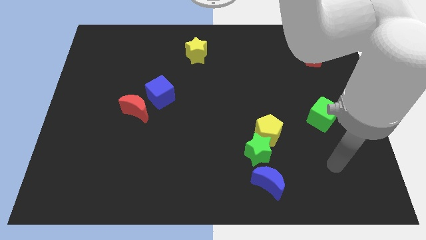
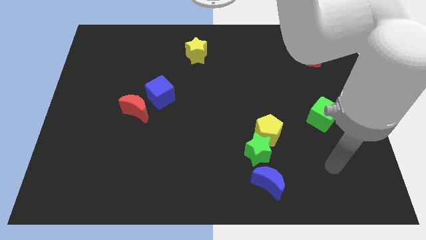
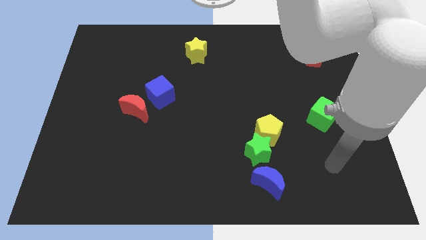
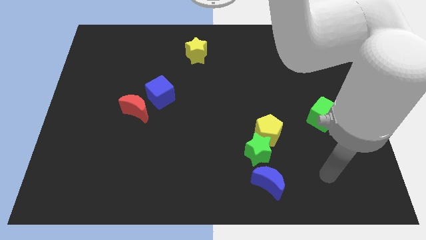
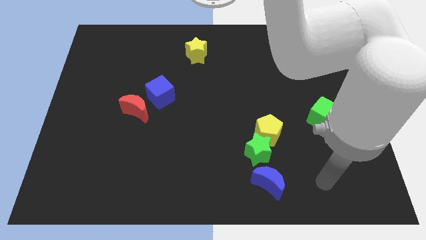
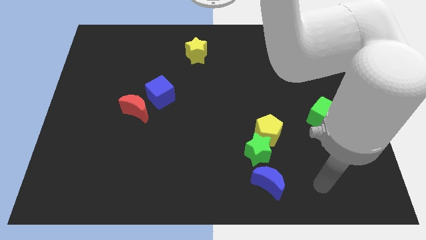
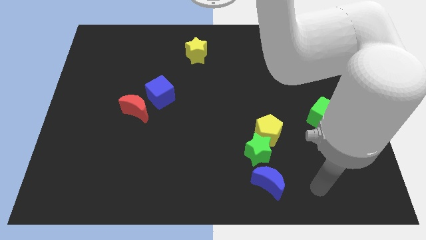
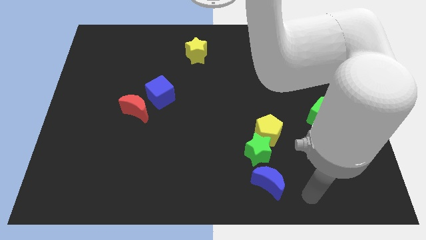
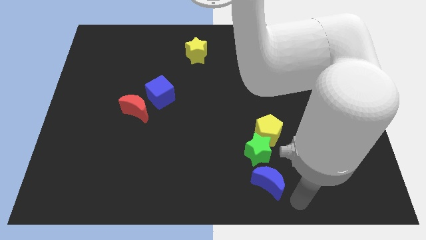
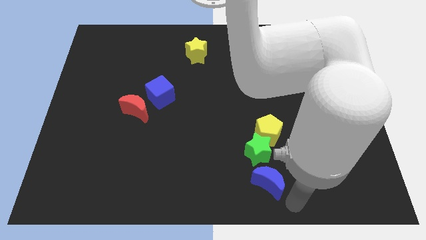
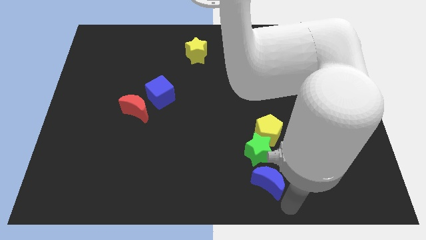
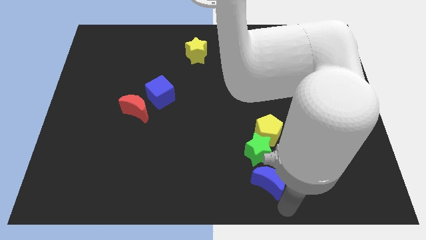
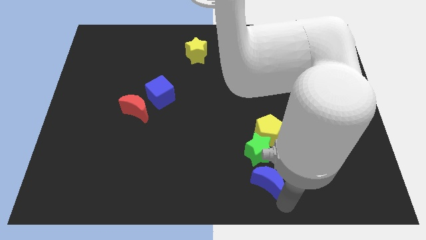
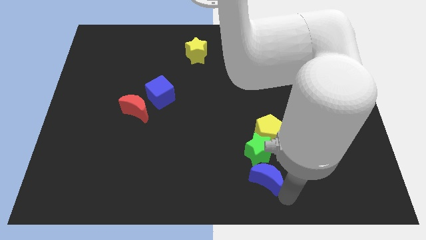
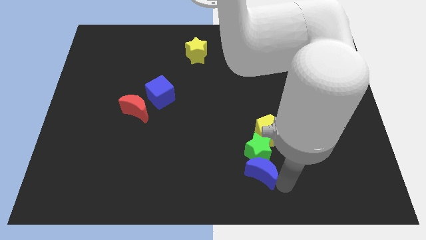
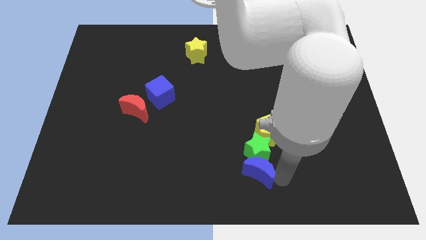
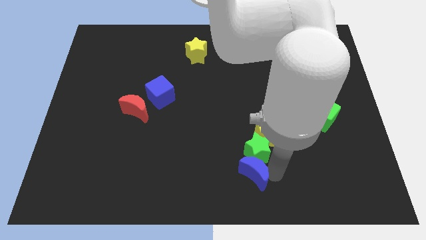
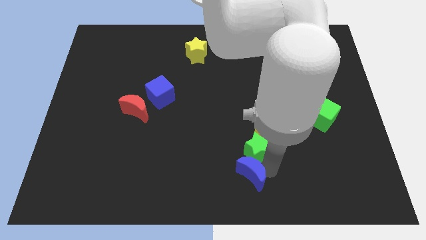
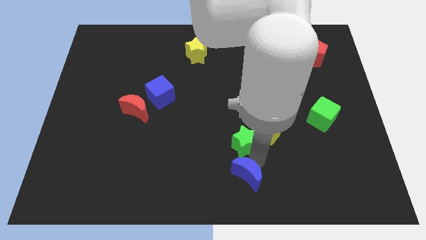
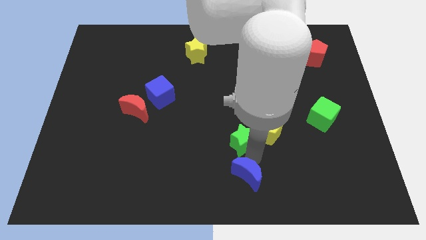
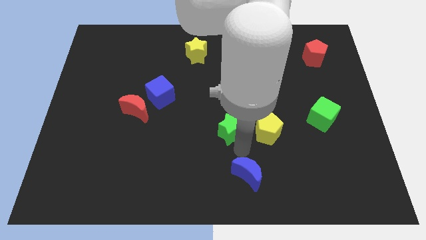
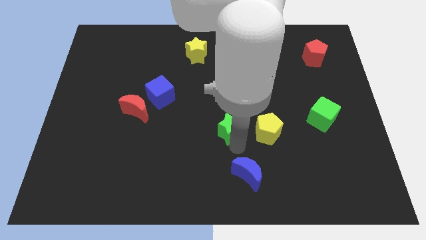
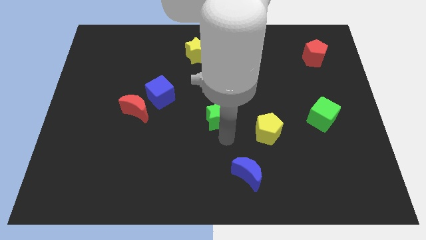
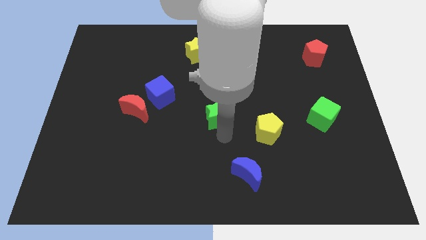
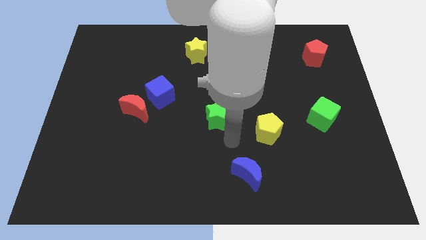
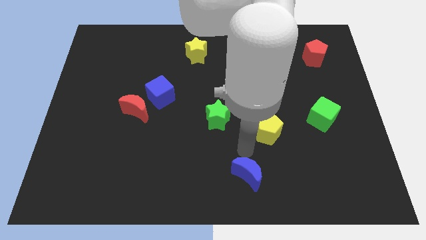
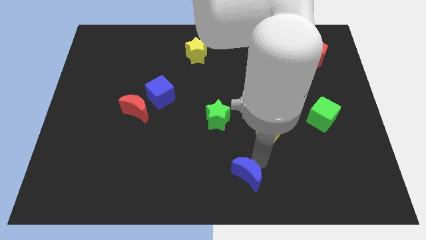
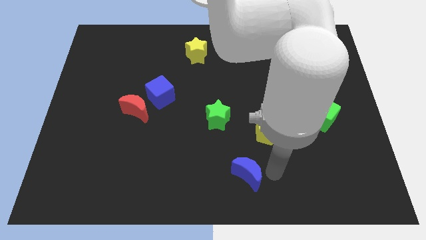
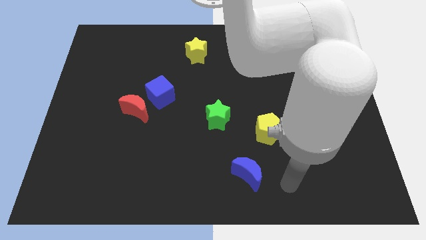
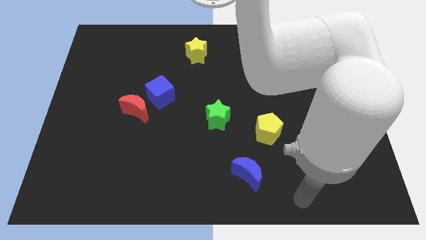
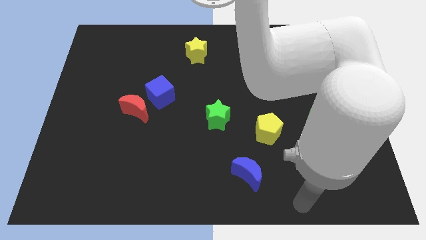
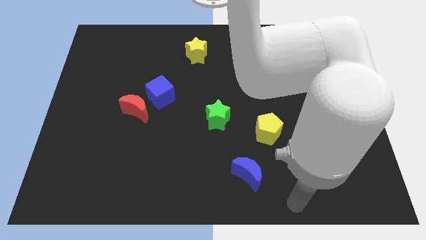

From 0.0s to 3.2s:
place green star to the center of the board

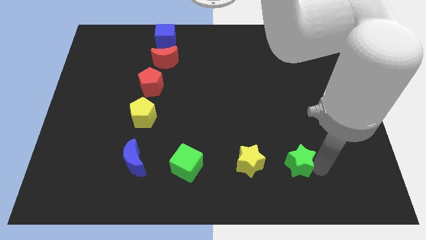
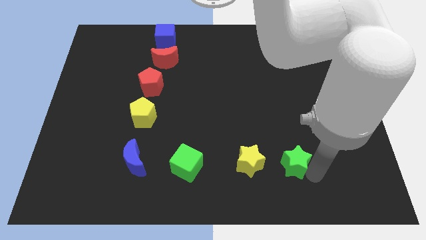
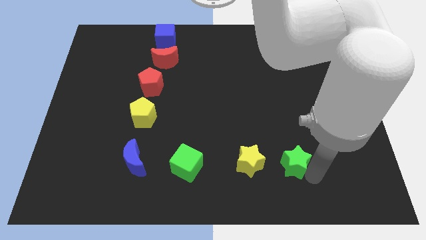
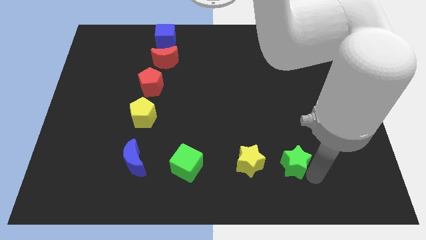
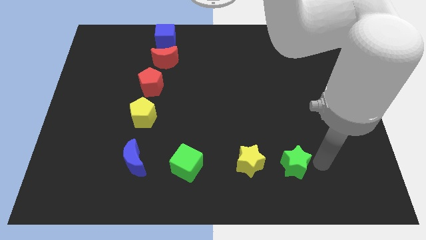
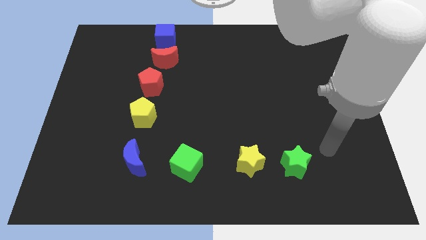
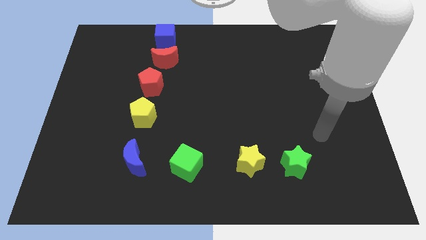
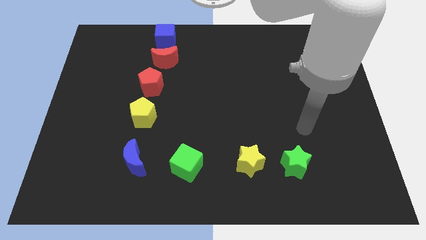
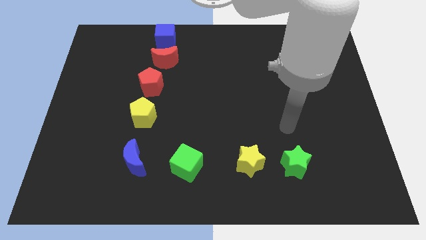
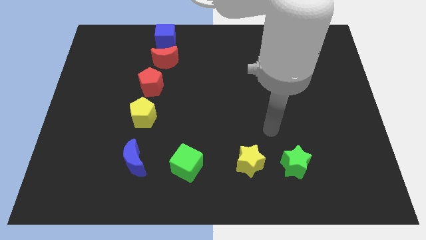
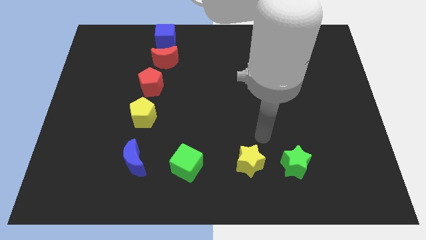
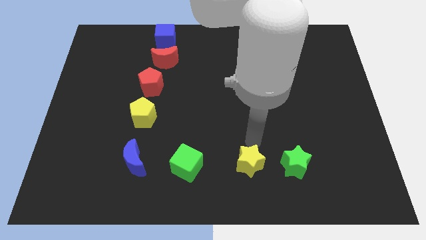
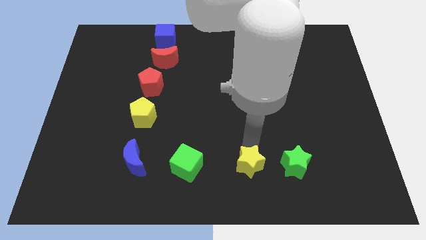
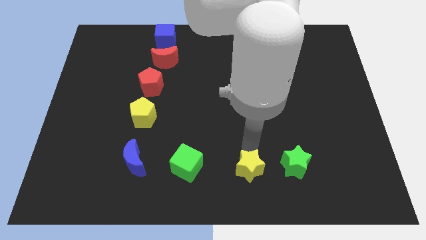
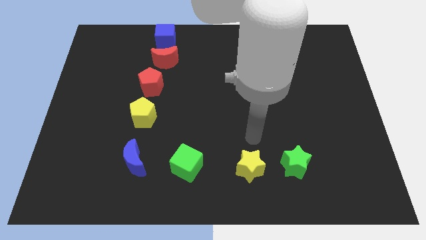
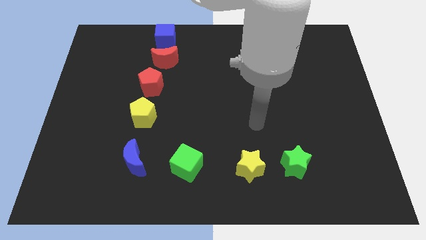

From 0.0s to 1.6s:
push the yellow star slightly to the bottom side

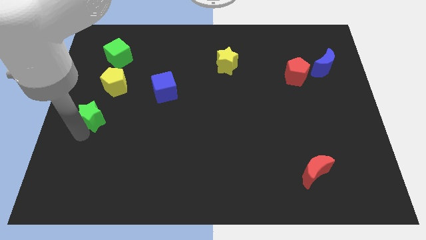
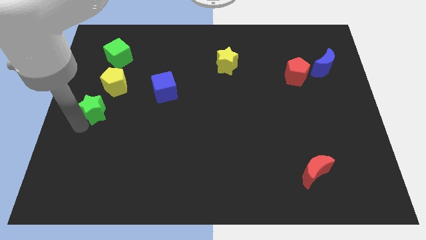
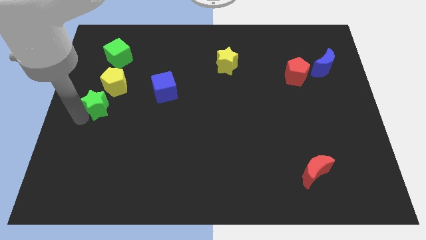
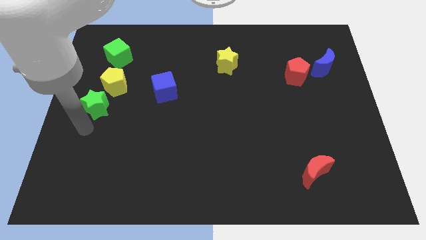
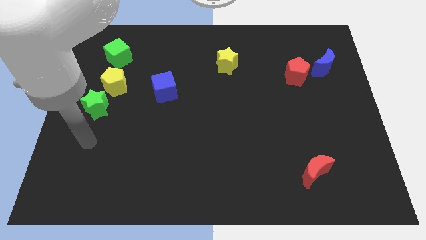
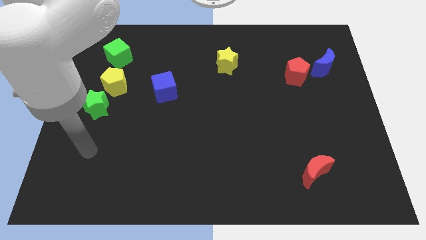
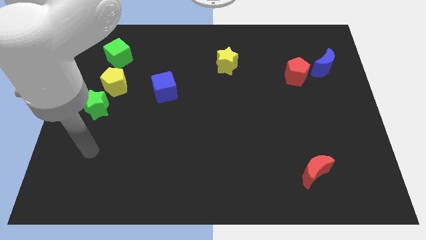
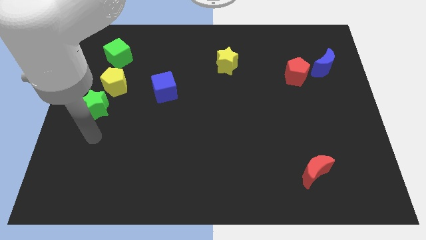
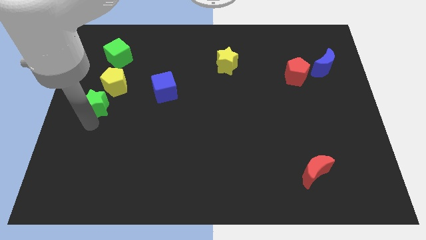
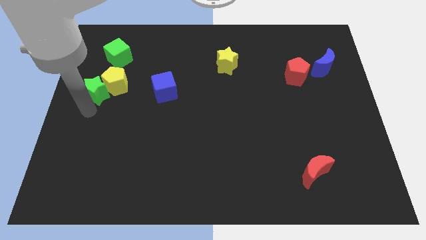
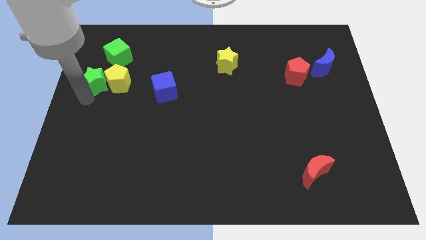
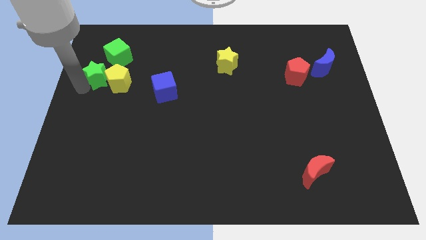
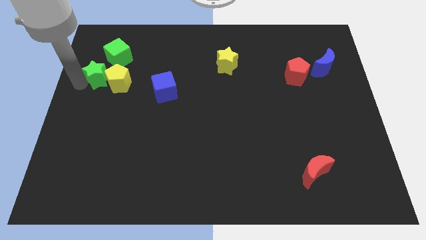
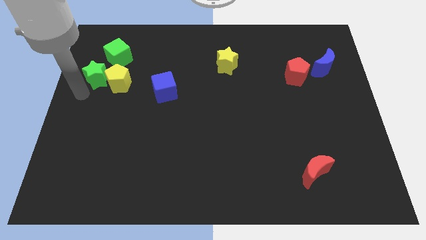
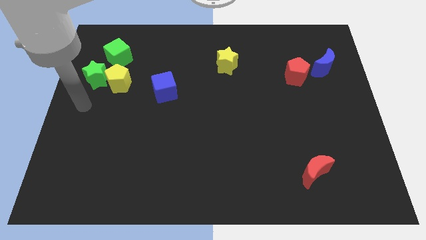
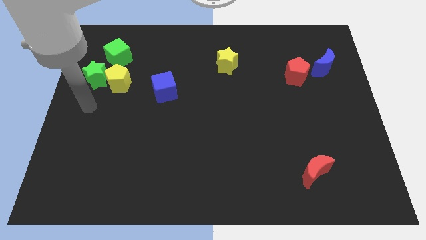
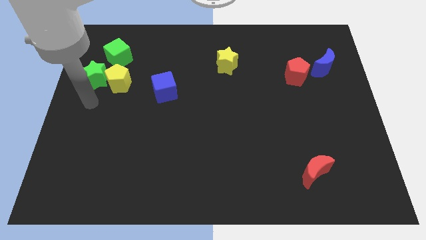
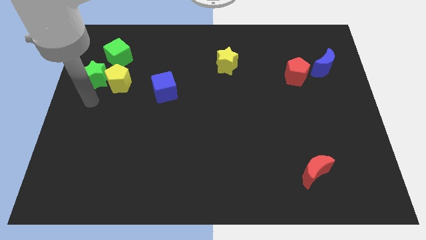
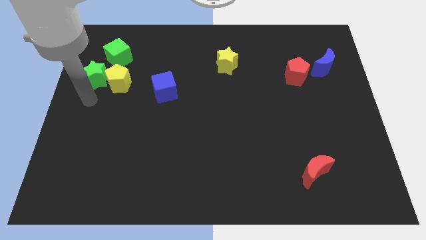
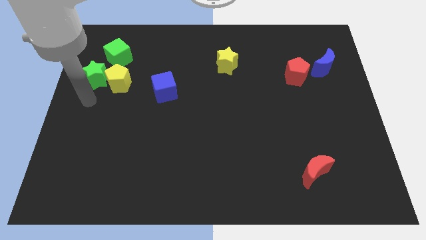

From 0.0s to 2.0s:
push the green star towards the green cube

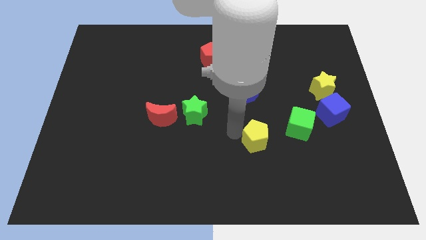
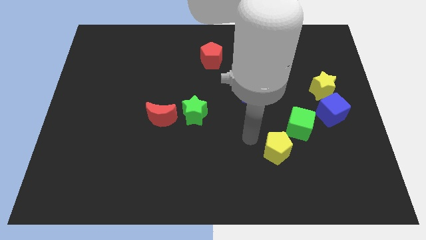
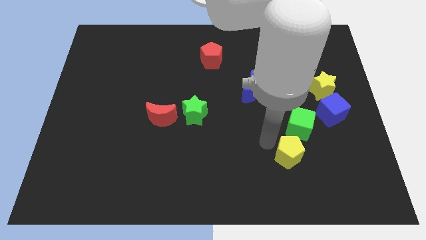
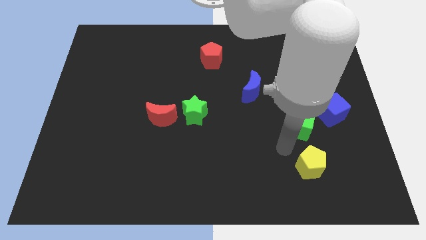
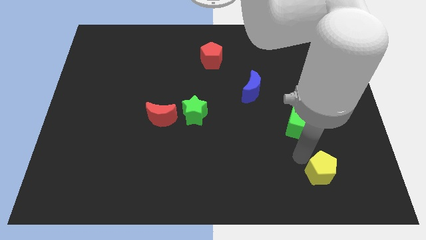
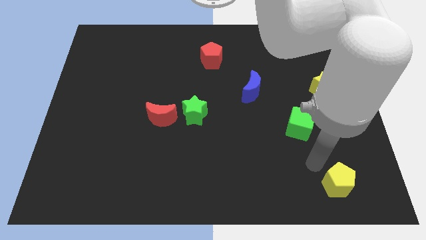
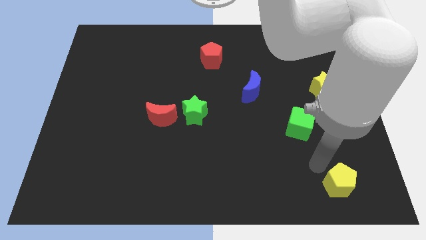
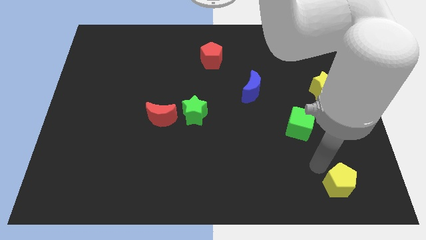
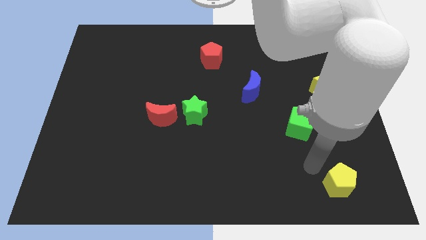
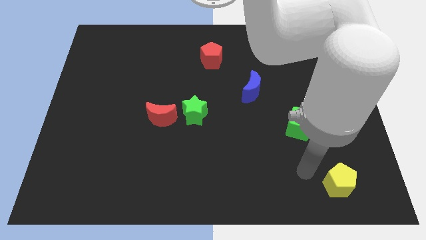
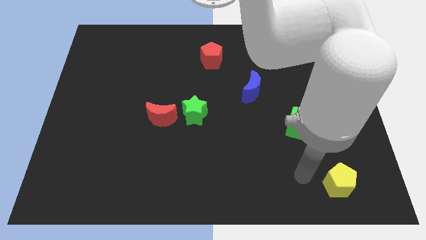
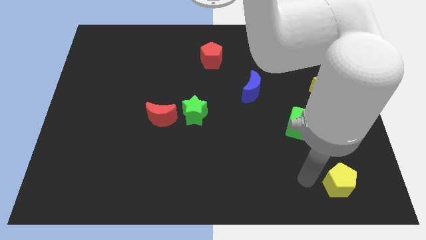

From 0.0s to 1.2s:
push the yellow pentagon to the bottom side of the green cube

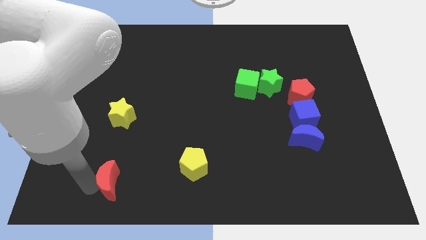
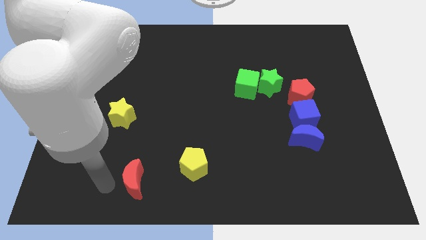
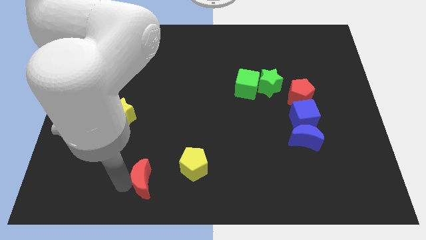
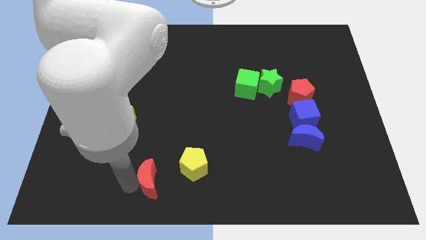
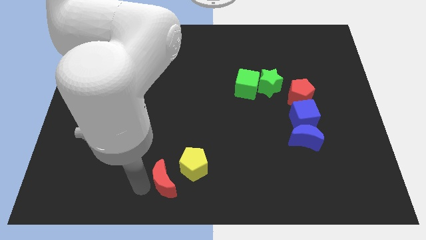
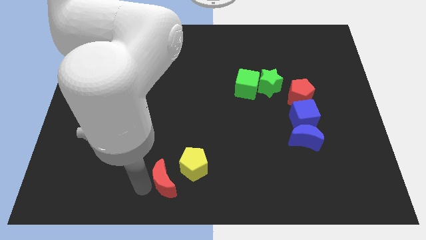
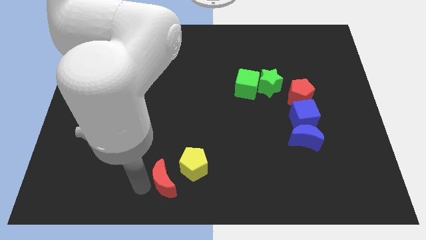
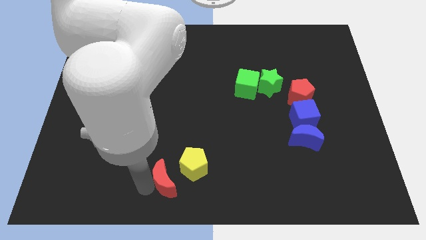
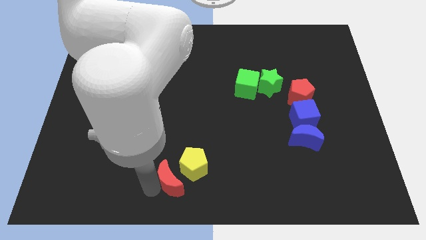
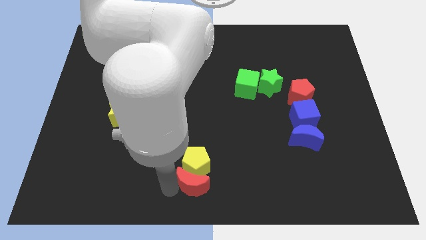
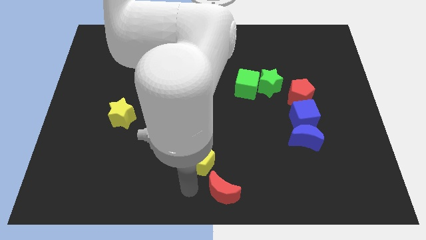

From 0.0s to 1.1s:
push the red crescent to the bottom right of the yellow pentagon
